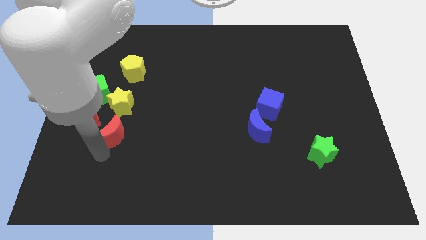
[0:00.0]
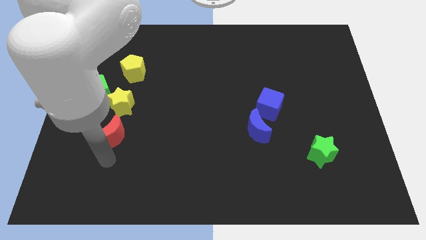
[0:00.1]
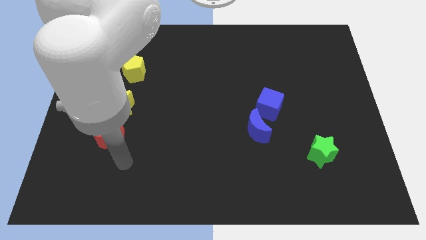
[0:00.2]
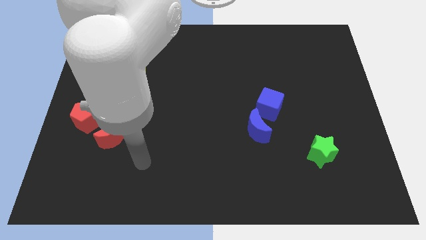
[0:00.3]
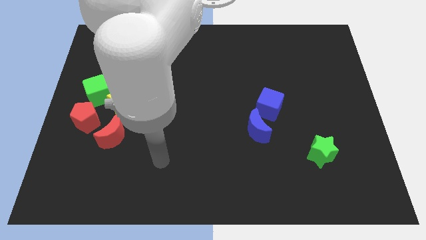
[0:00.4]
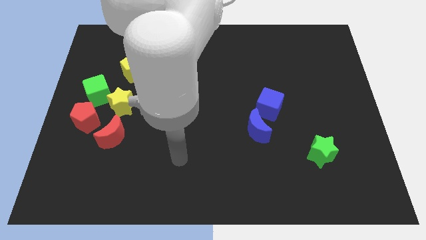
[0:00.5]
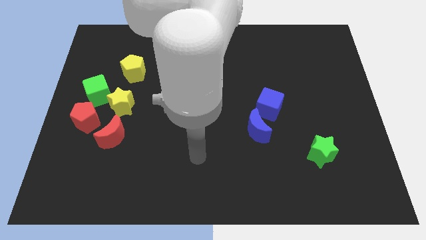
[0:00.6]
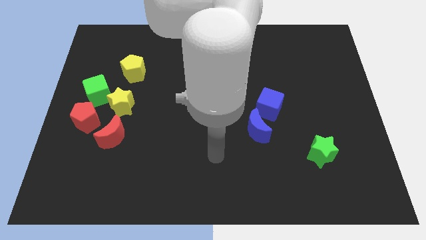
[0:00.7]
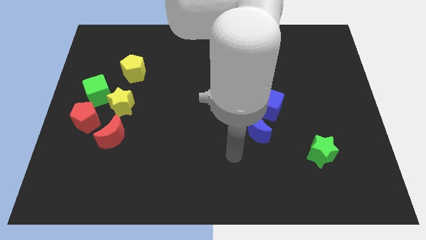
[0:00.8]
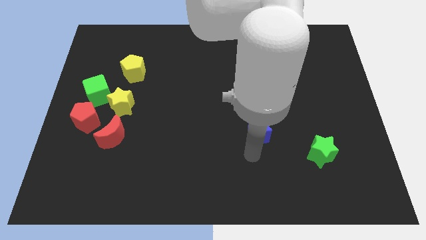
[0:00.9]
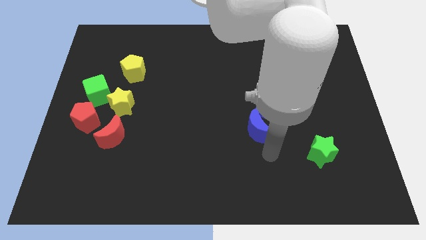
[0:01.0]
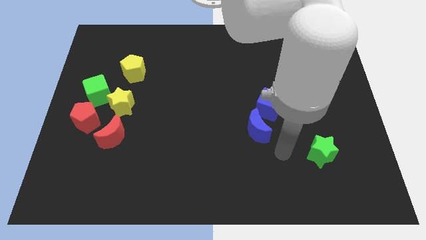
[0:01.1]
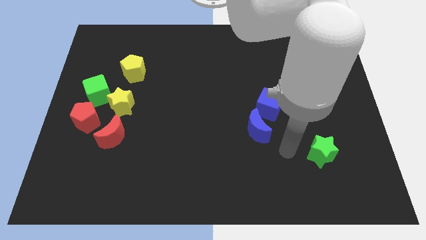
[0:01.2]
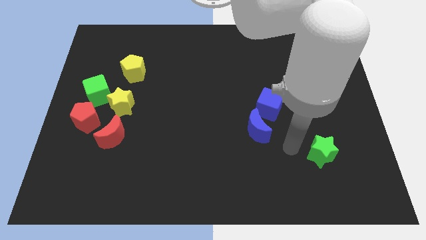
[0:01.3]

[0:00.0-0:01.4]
move your arm towards the right side of the board

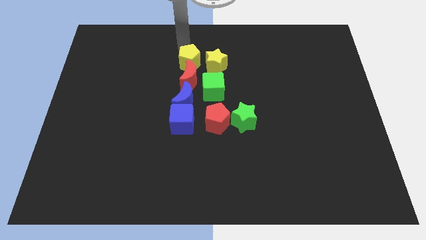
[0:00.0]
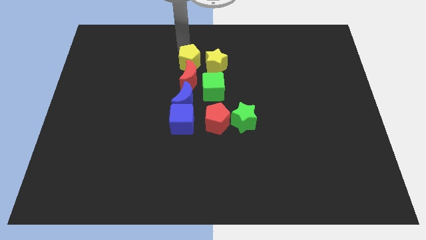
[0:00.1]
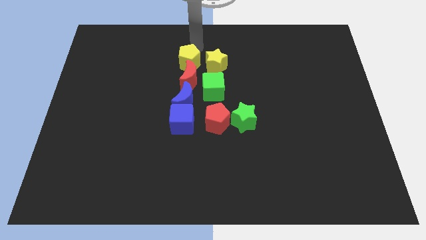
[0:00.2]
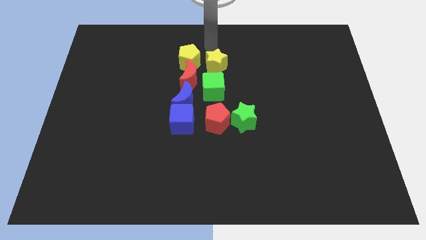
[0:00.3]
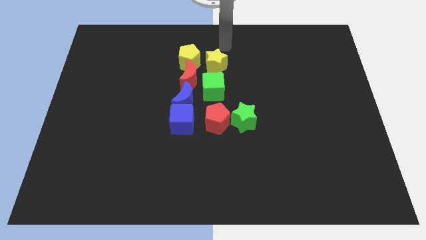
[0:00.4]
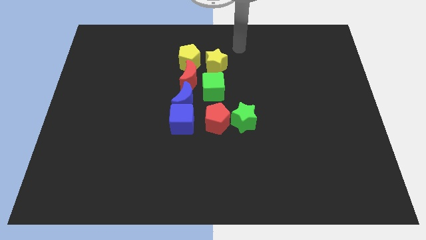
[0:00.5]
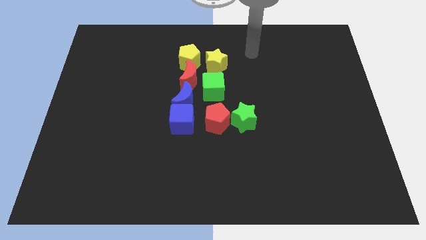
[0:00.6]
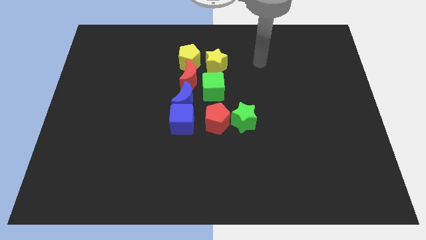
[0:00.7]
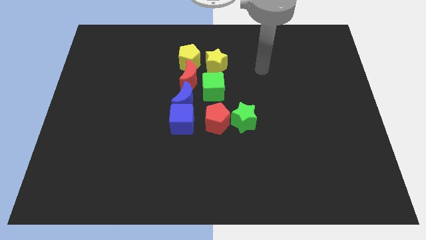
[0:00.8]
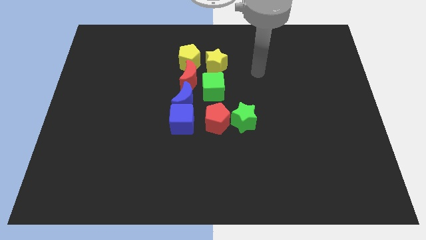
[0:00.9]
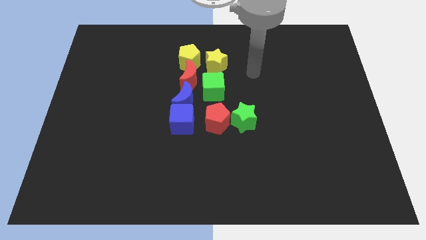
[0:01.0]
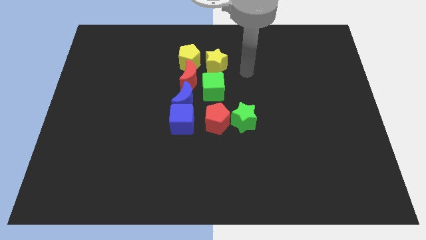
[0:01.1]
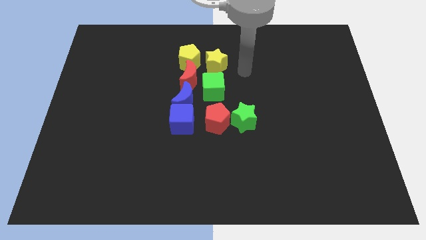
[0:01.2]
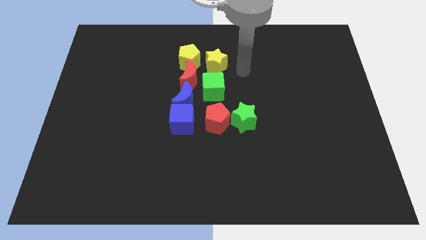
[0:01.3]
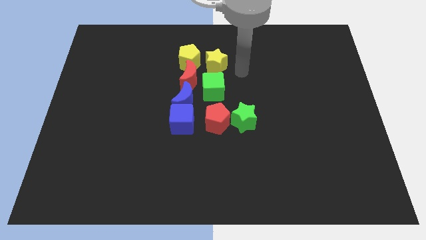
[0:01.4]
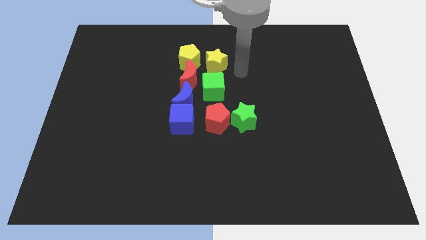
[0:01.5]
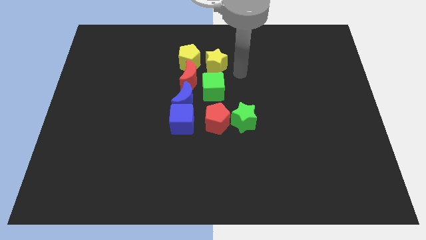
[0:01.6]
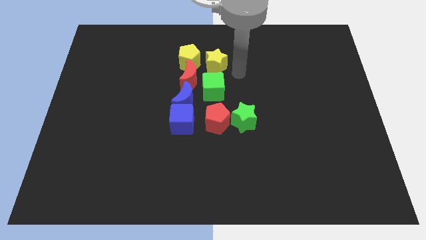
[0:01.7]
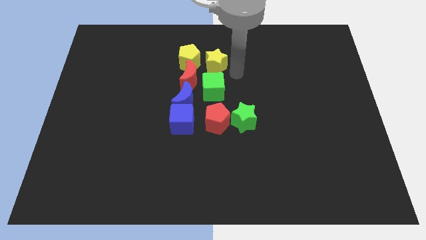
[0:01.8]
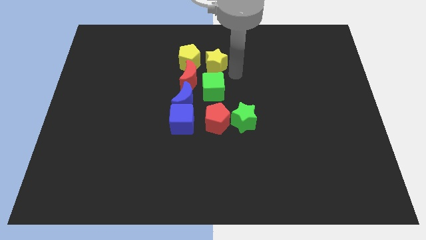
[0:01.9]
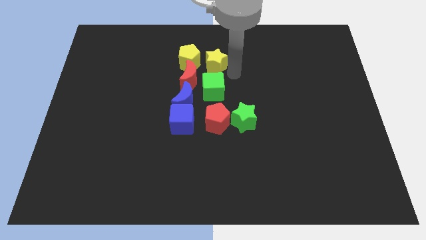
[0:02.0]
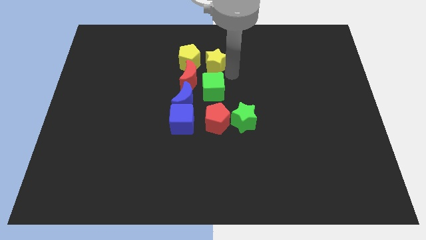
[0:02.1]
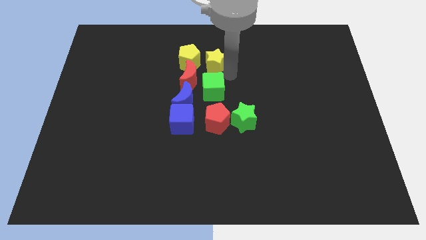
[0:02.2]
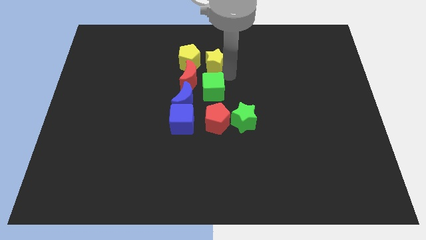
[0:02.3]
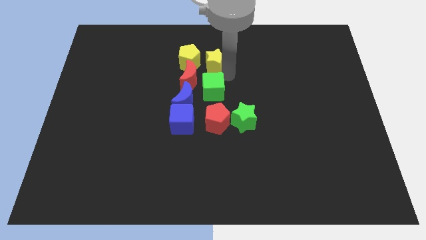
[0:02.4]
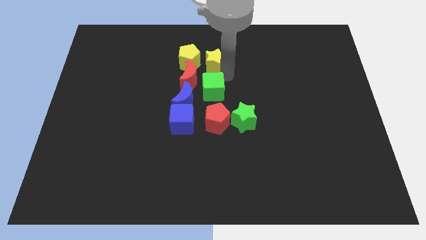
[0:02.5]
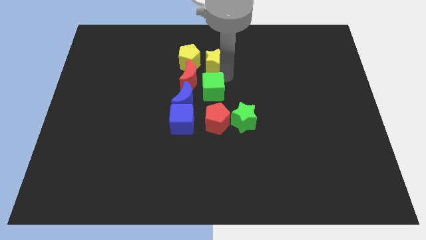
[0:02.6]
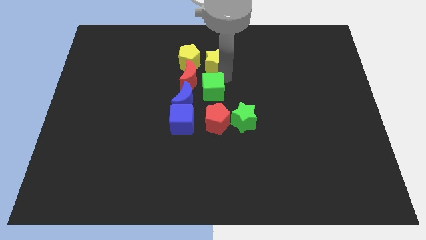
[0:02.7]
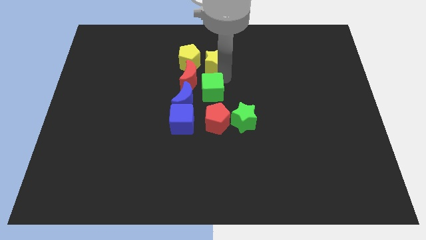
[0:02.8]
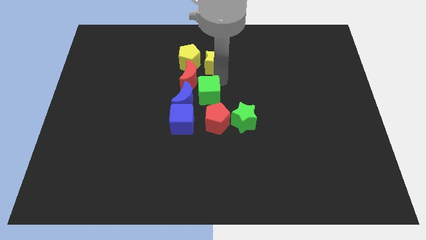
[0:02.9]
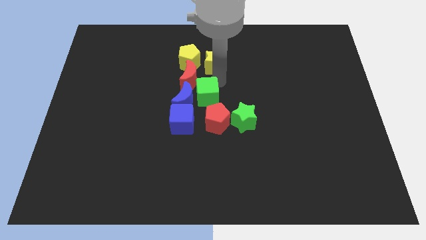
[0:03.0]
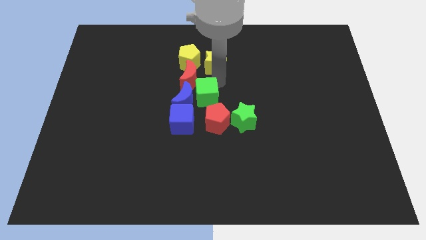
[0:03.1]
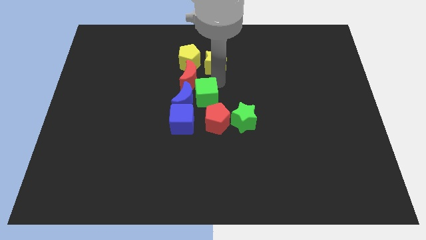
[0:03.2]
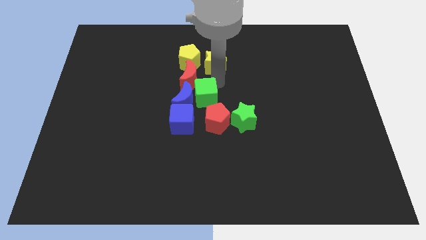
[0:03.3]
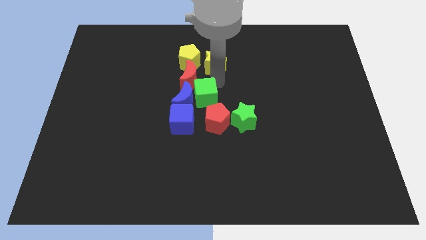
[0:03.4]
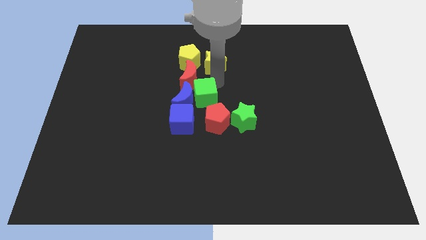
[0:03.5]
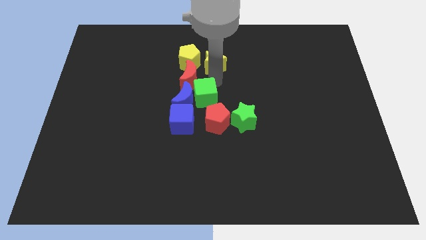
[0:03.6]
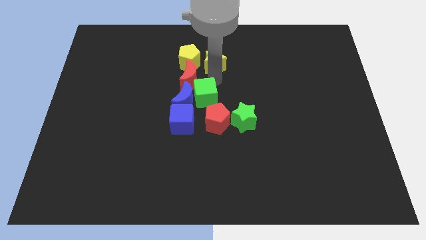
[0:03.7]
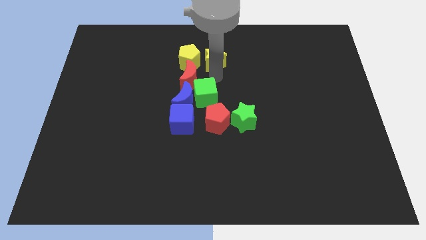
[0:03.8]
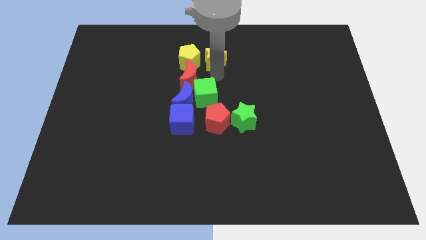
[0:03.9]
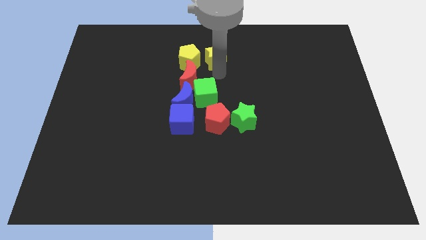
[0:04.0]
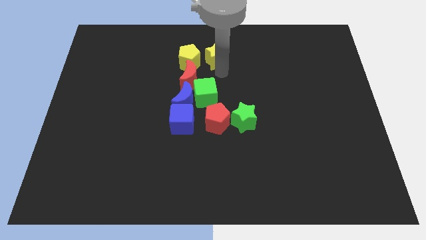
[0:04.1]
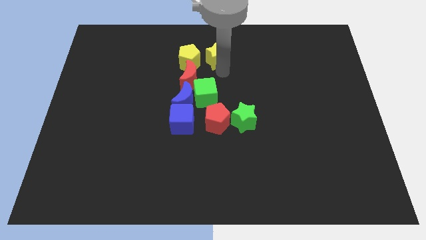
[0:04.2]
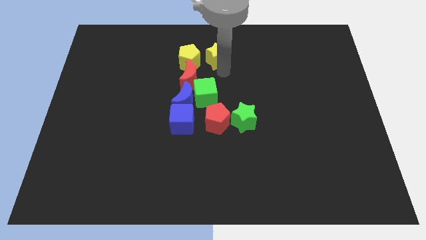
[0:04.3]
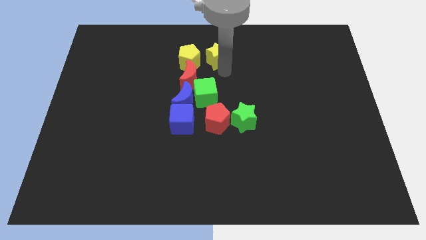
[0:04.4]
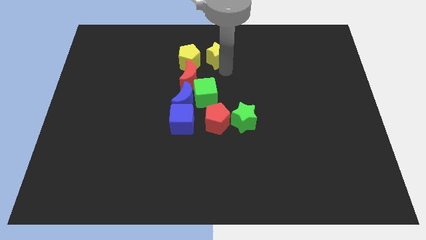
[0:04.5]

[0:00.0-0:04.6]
move the yellow star away from the green cube

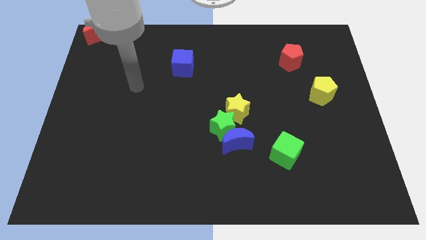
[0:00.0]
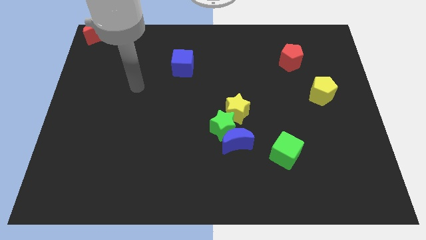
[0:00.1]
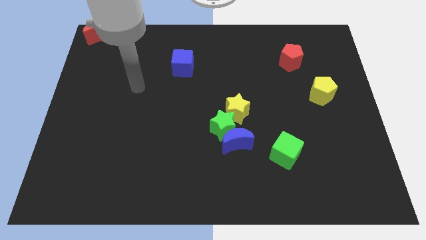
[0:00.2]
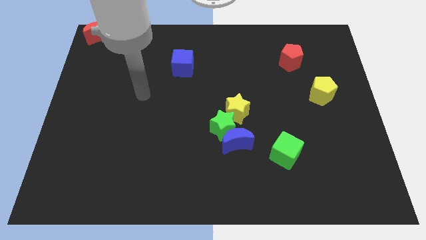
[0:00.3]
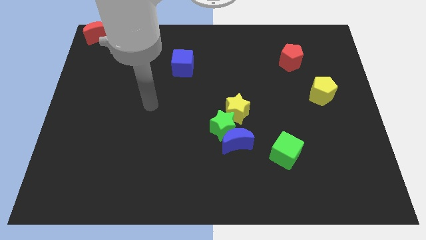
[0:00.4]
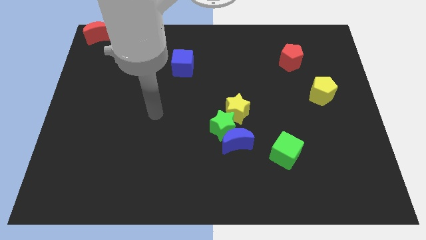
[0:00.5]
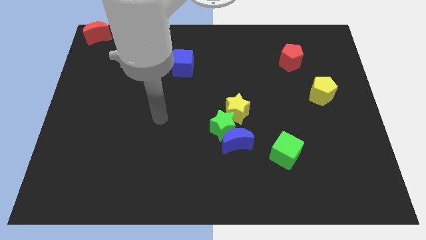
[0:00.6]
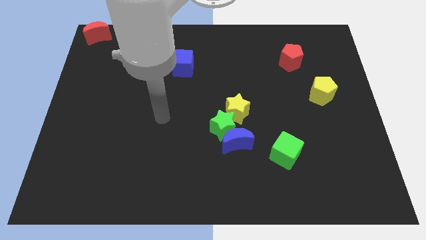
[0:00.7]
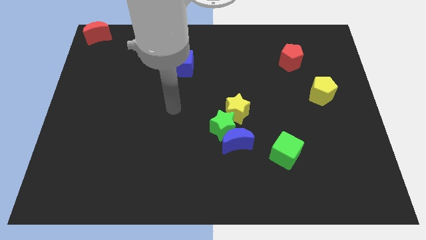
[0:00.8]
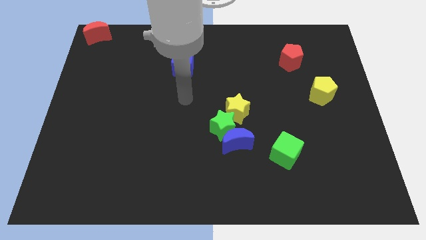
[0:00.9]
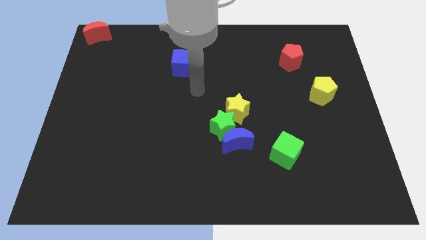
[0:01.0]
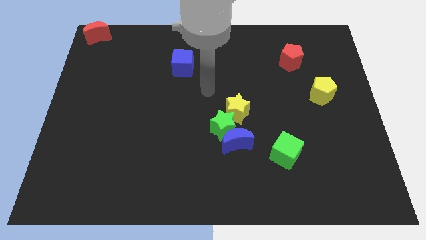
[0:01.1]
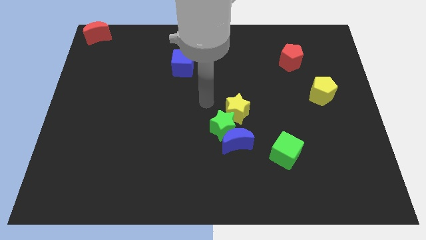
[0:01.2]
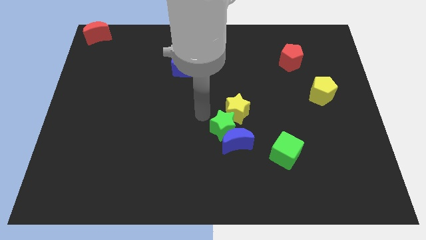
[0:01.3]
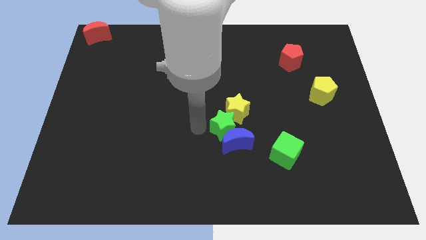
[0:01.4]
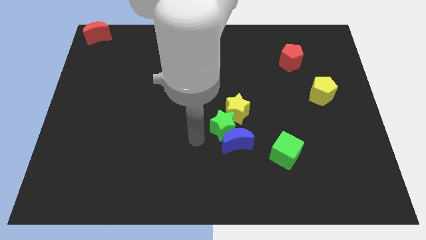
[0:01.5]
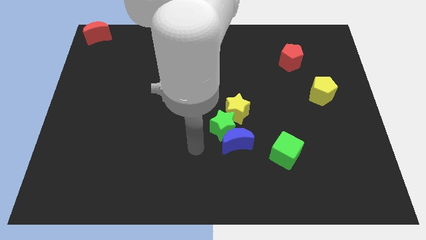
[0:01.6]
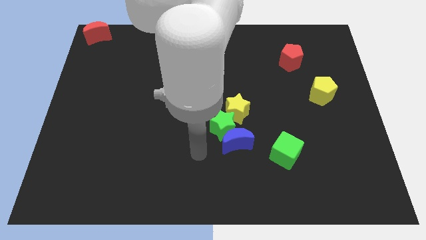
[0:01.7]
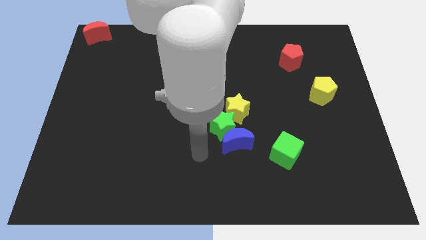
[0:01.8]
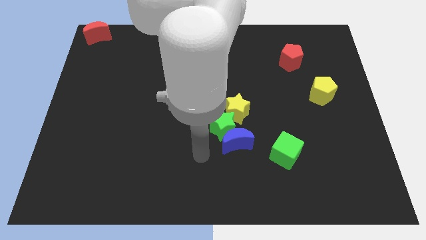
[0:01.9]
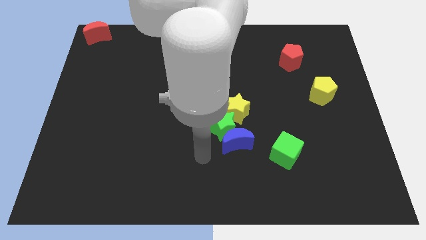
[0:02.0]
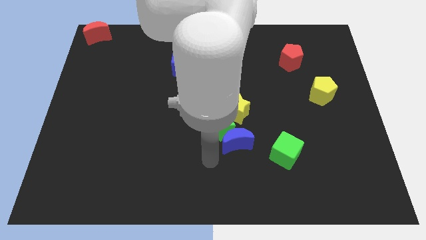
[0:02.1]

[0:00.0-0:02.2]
move your hand towards the bottom center

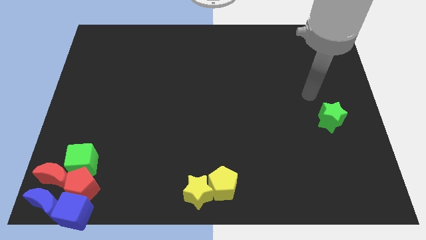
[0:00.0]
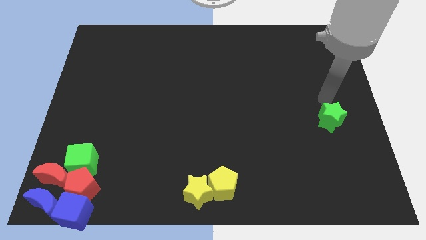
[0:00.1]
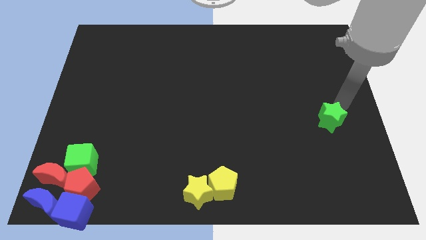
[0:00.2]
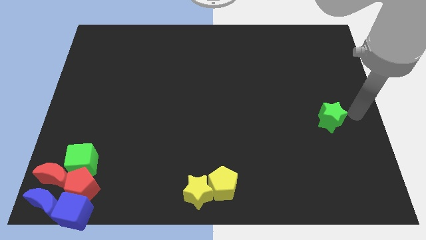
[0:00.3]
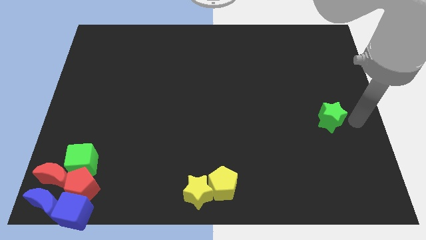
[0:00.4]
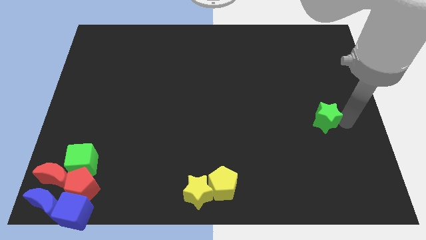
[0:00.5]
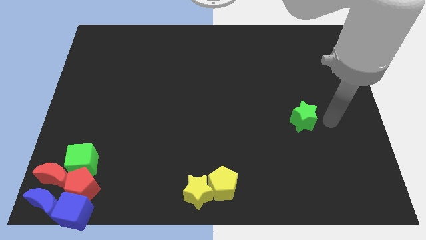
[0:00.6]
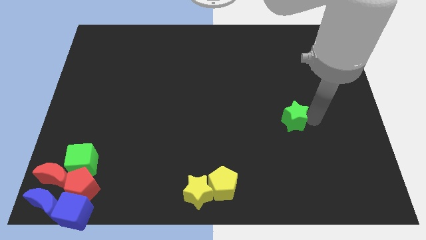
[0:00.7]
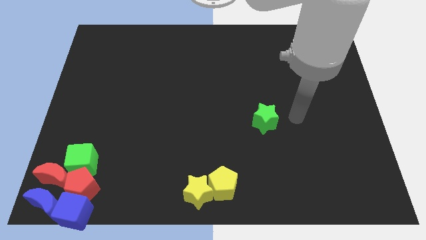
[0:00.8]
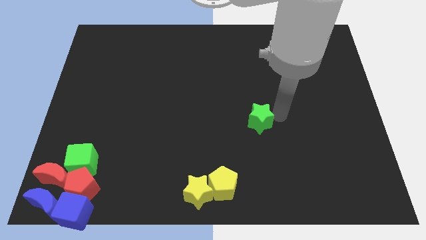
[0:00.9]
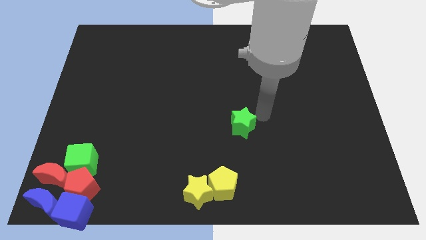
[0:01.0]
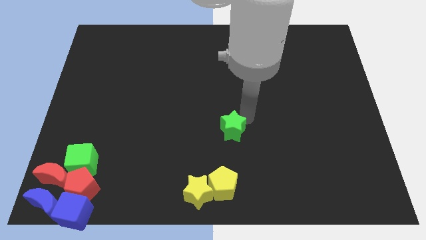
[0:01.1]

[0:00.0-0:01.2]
slightly push the green star towards the left of the board
